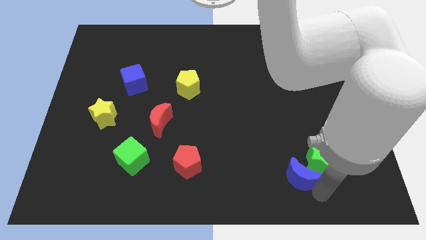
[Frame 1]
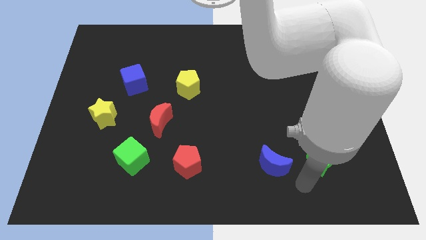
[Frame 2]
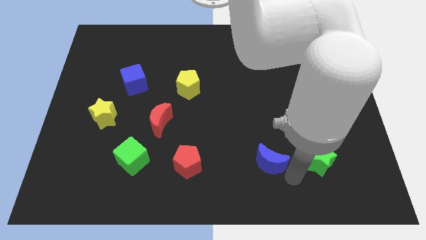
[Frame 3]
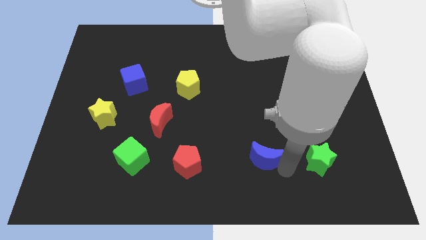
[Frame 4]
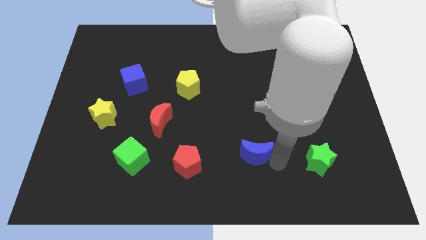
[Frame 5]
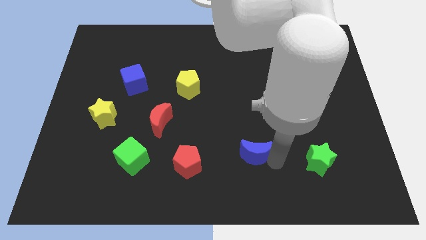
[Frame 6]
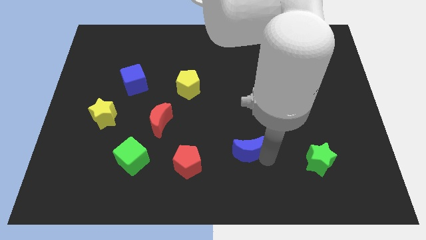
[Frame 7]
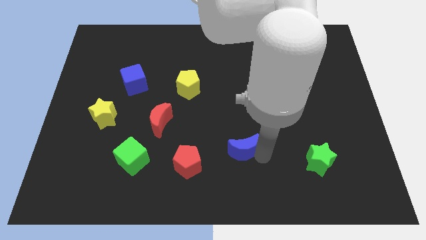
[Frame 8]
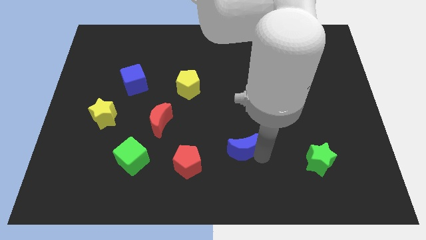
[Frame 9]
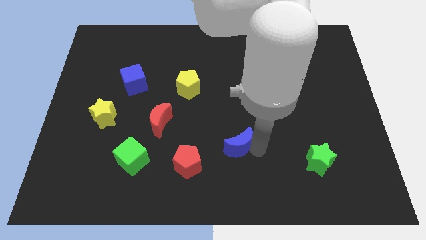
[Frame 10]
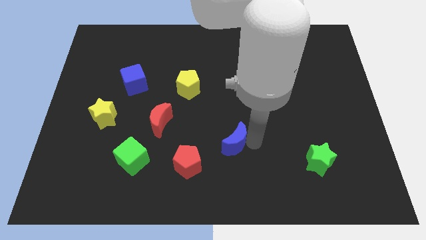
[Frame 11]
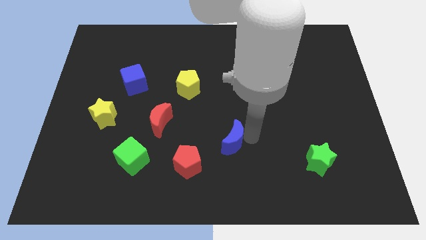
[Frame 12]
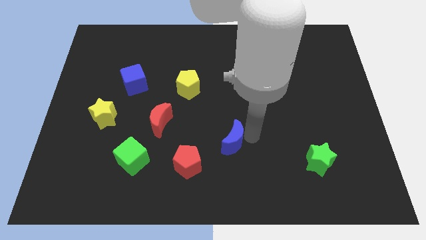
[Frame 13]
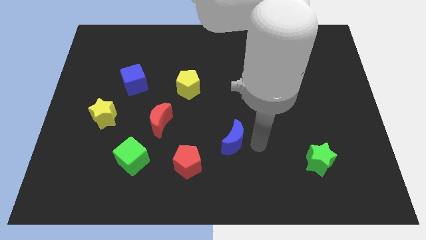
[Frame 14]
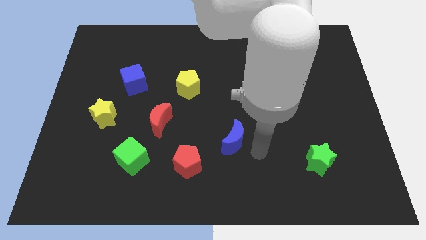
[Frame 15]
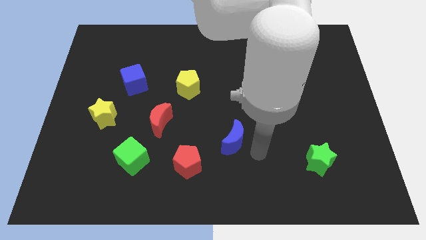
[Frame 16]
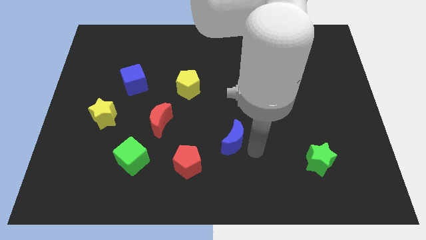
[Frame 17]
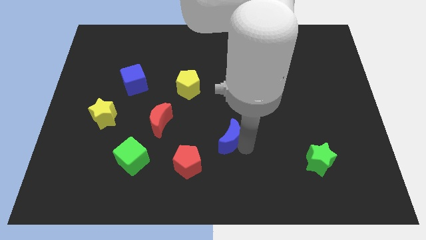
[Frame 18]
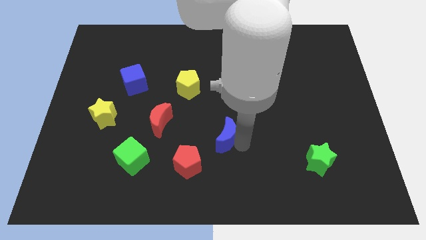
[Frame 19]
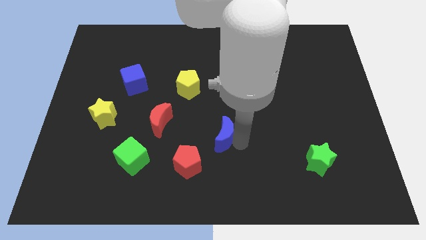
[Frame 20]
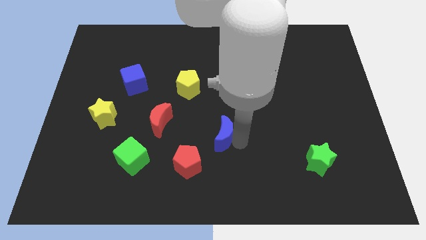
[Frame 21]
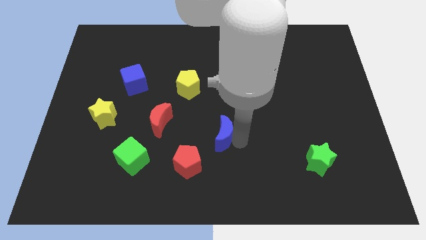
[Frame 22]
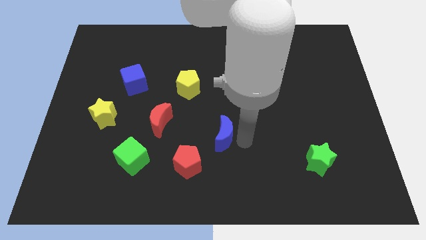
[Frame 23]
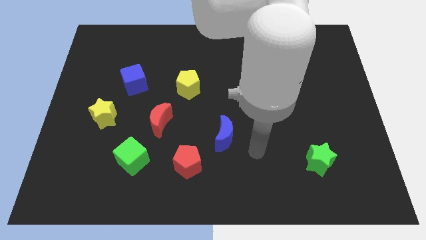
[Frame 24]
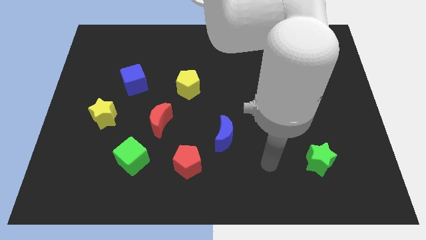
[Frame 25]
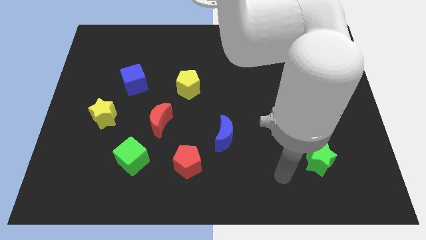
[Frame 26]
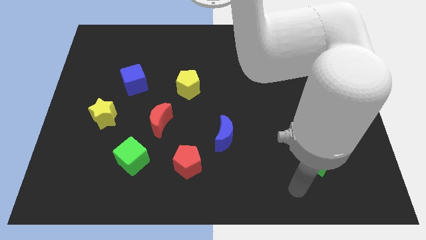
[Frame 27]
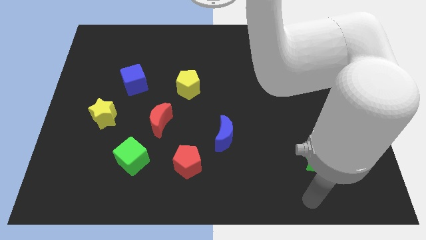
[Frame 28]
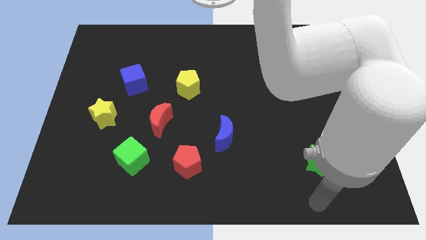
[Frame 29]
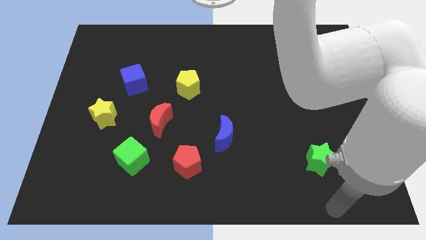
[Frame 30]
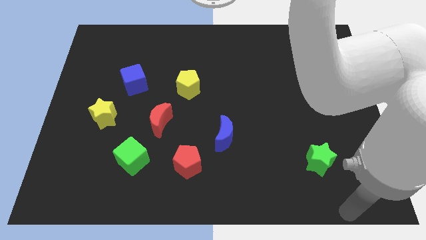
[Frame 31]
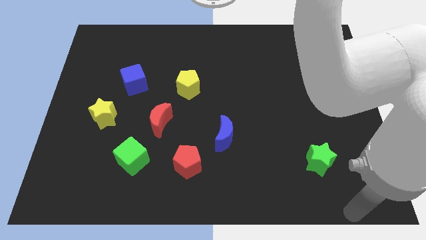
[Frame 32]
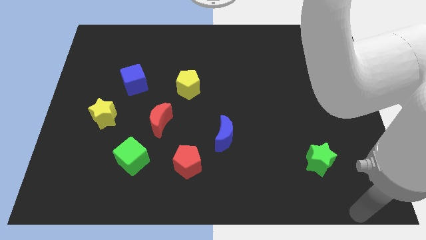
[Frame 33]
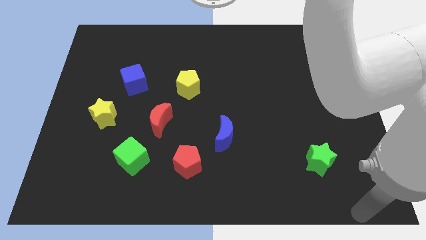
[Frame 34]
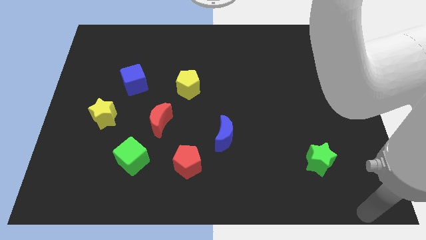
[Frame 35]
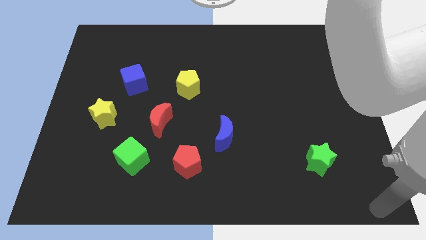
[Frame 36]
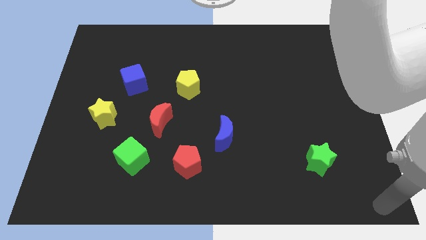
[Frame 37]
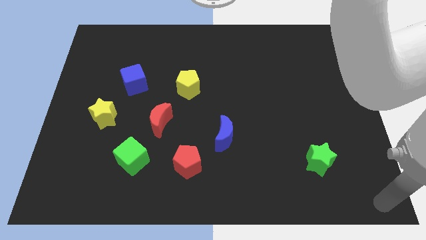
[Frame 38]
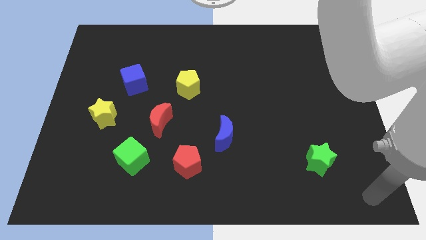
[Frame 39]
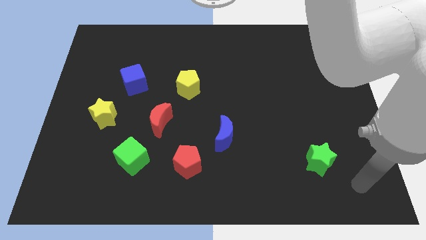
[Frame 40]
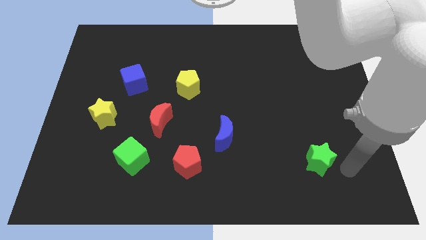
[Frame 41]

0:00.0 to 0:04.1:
separate blue moon from green star

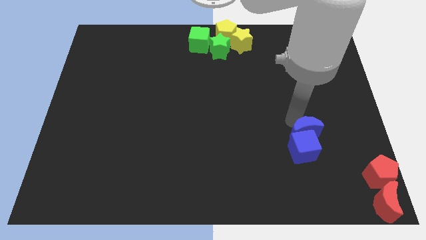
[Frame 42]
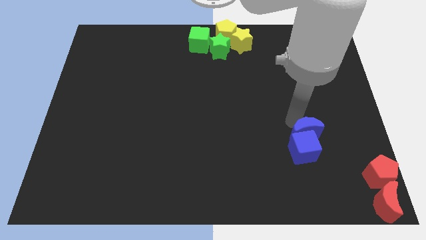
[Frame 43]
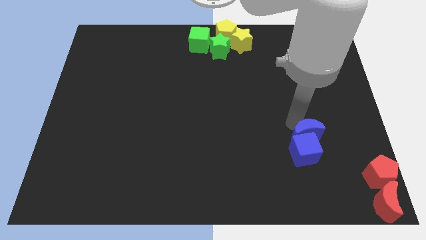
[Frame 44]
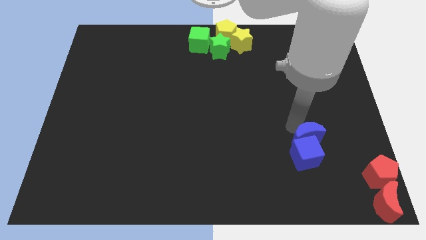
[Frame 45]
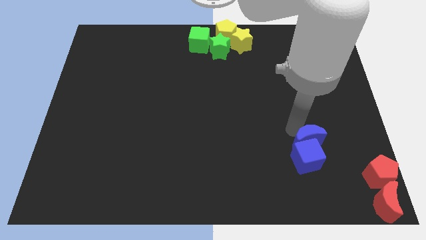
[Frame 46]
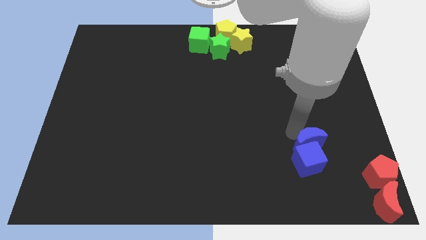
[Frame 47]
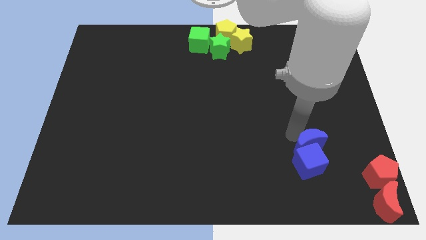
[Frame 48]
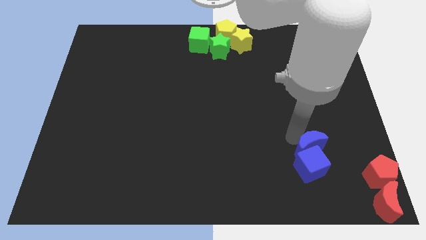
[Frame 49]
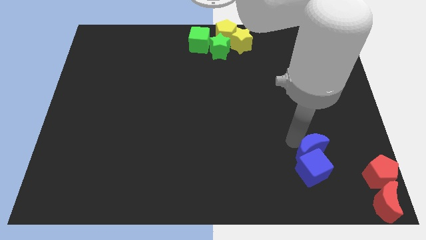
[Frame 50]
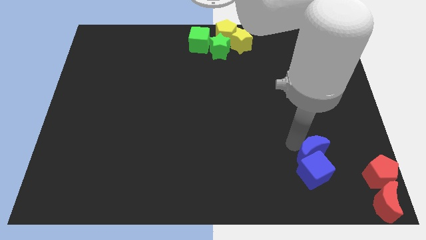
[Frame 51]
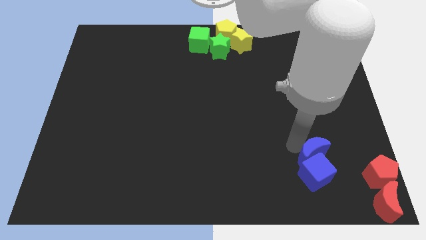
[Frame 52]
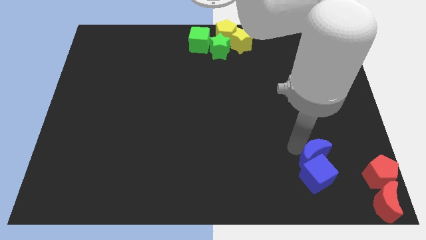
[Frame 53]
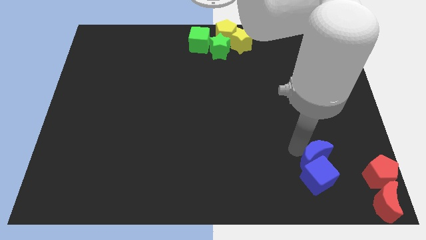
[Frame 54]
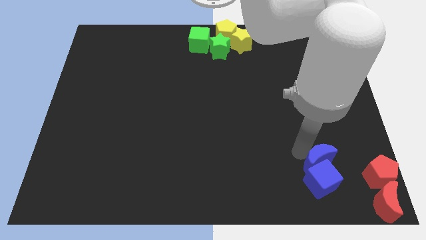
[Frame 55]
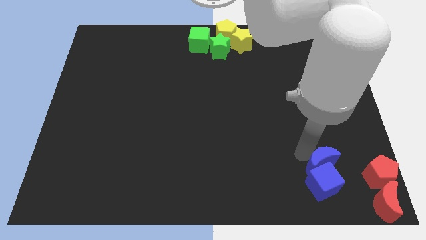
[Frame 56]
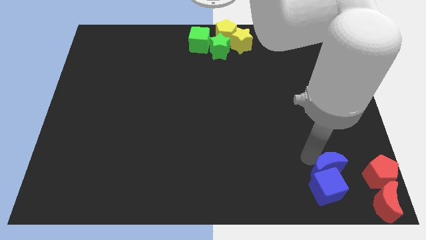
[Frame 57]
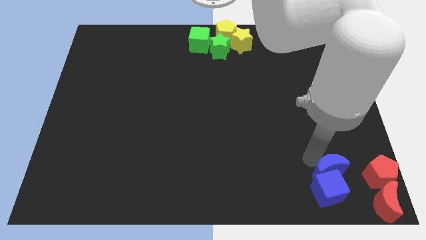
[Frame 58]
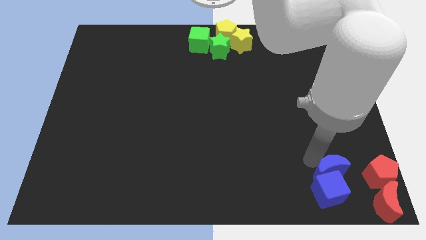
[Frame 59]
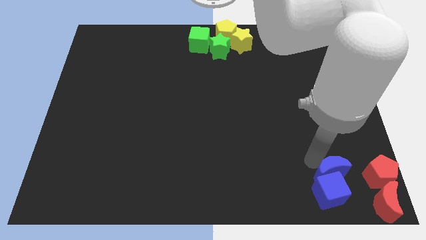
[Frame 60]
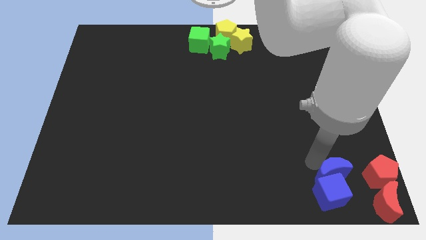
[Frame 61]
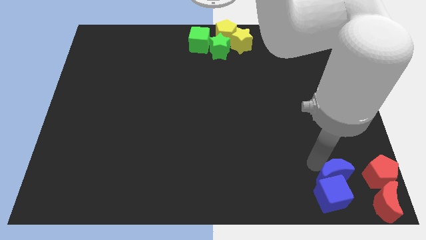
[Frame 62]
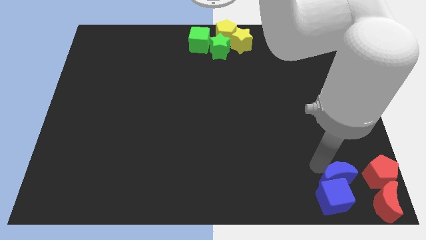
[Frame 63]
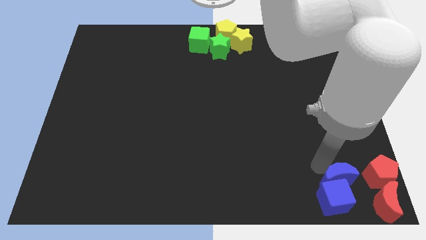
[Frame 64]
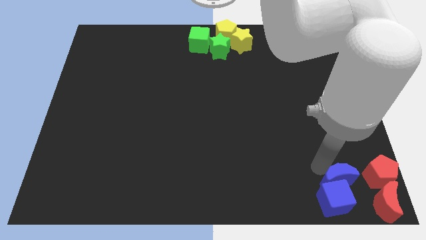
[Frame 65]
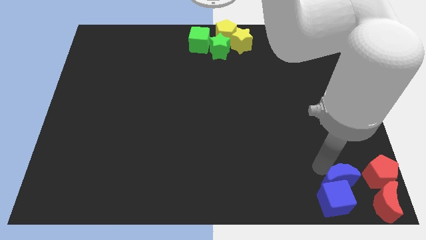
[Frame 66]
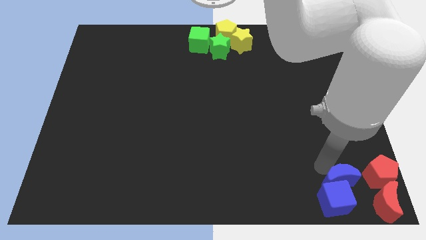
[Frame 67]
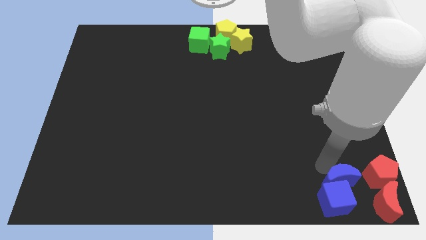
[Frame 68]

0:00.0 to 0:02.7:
move blue blocks to the bottom

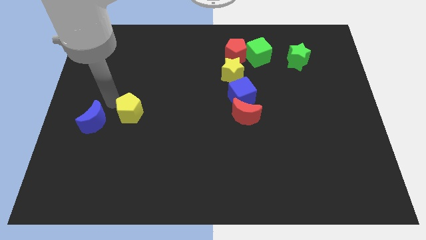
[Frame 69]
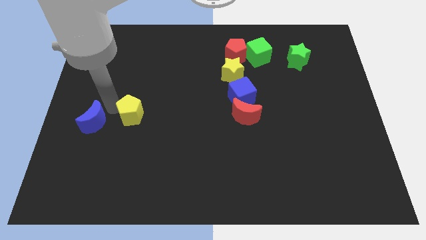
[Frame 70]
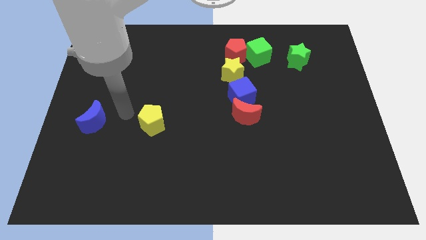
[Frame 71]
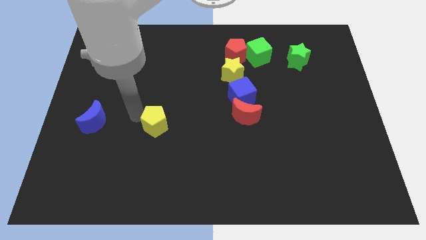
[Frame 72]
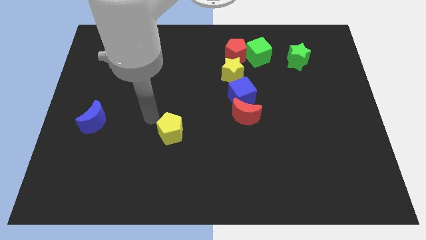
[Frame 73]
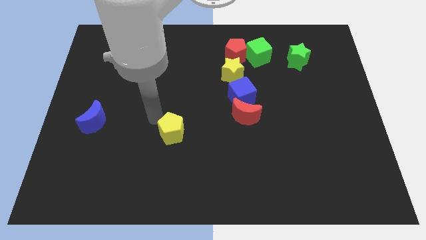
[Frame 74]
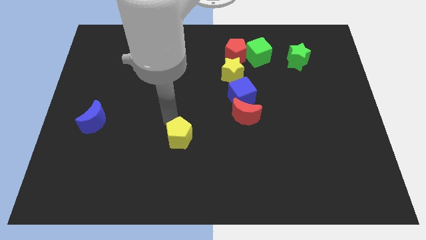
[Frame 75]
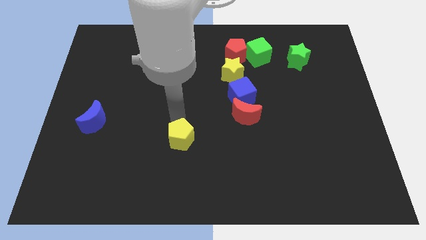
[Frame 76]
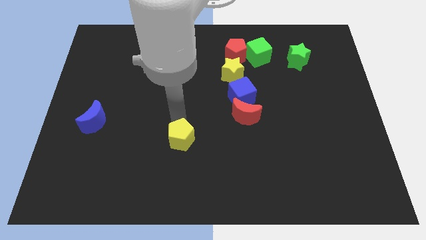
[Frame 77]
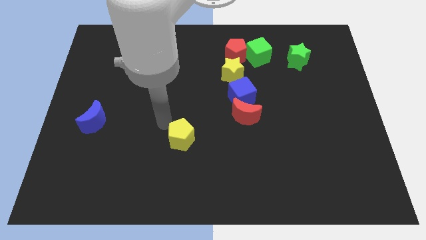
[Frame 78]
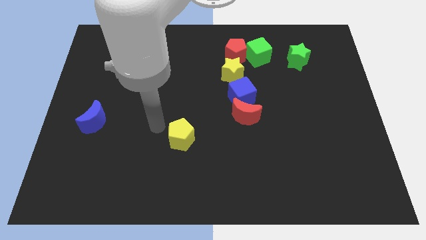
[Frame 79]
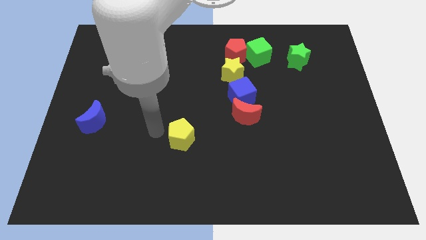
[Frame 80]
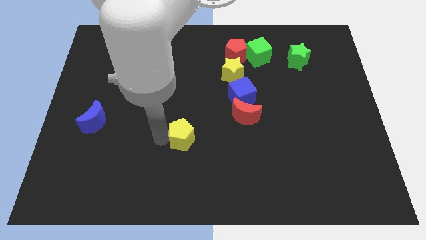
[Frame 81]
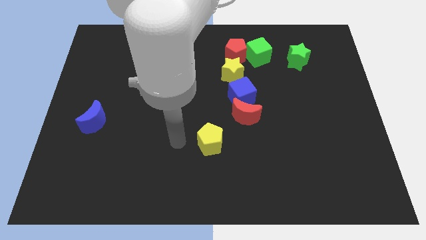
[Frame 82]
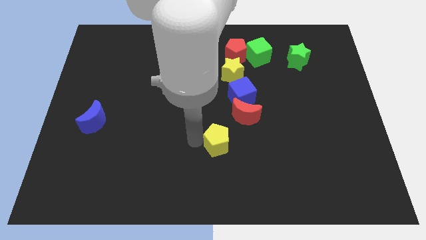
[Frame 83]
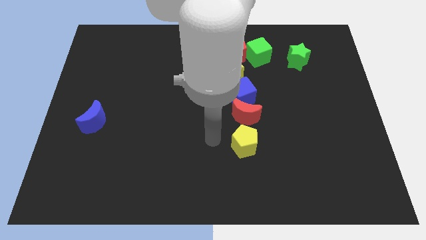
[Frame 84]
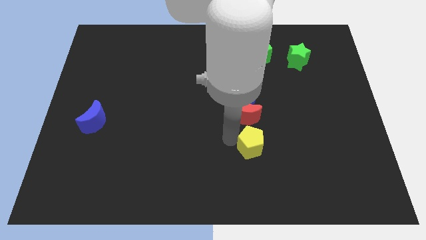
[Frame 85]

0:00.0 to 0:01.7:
move the yellow pentagon to the bottom of the red crescent

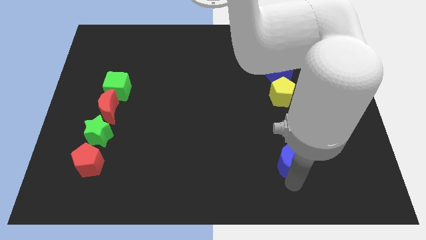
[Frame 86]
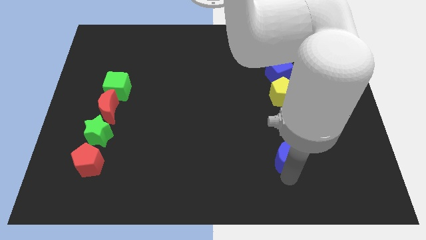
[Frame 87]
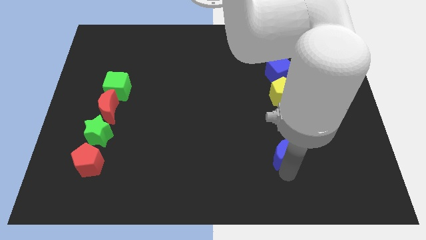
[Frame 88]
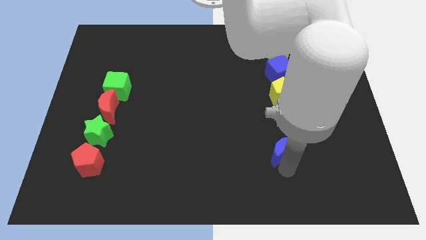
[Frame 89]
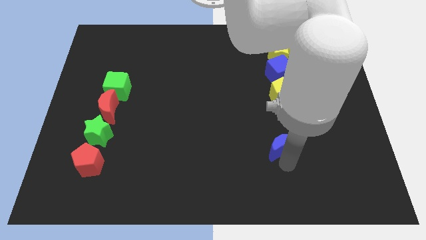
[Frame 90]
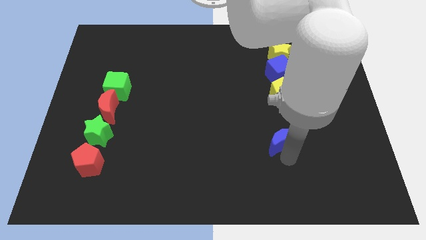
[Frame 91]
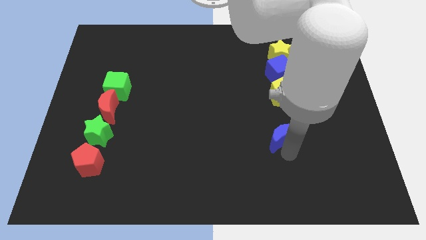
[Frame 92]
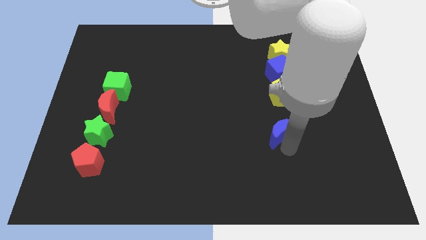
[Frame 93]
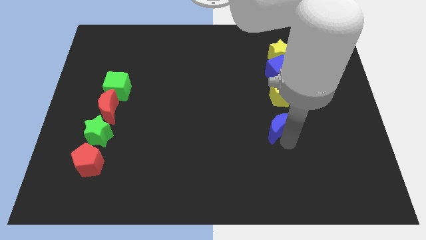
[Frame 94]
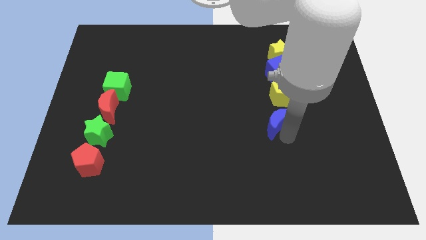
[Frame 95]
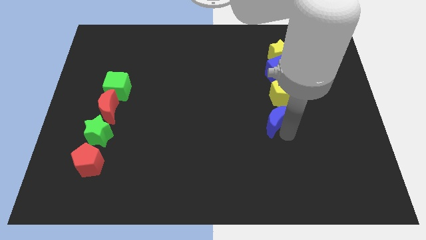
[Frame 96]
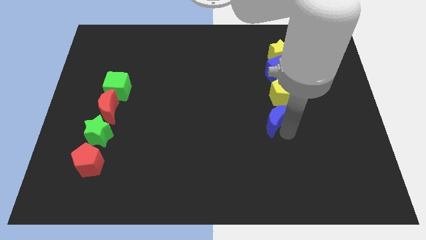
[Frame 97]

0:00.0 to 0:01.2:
push the blue crescent to the bottom of the yellow pentagon
